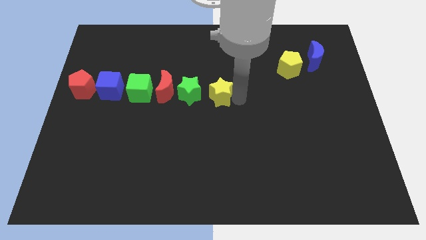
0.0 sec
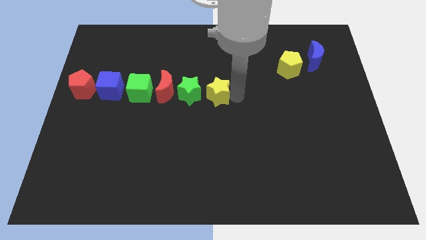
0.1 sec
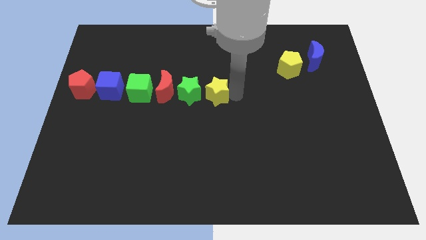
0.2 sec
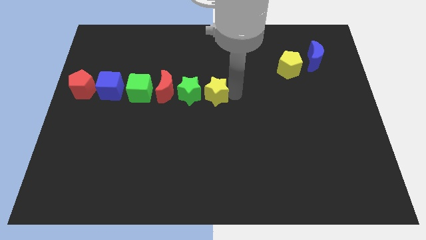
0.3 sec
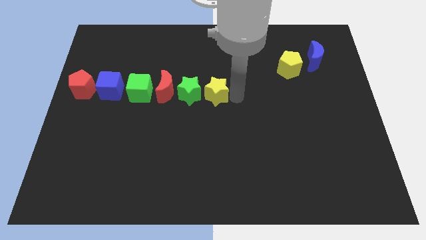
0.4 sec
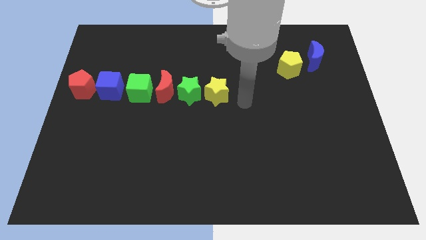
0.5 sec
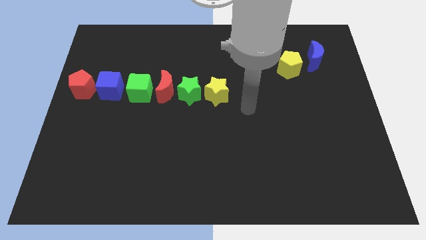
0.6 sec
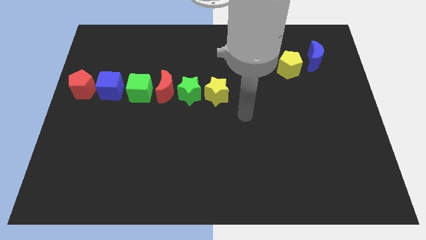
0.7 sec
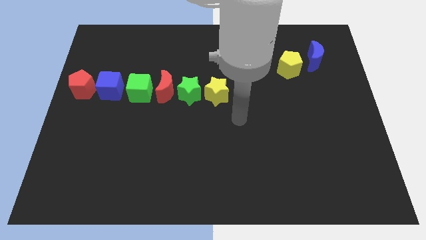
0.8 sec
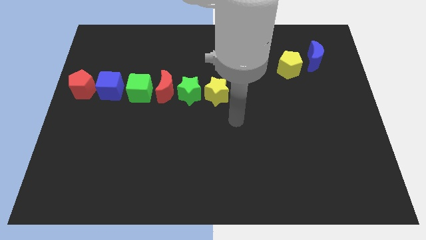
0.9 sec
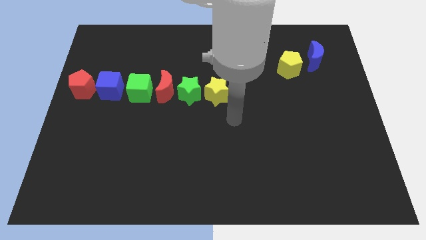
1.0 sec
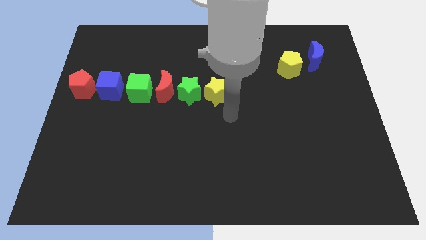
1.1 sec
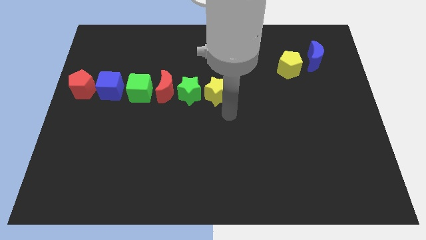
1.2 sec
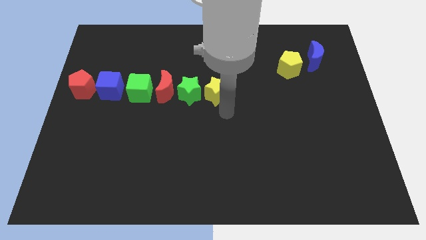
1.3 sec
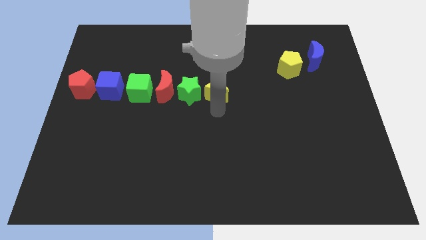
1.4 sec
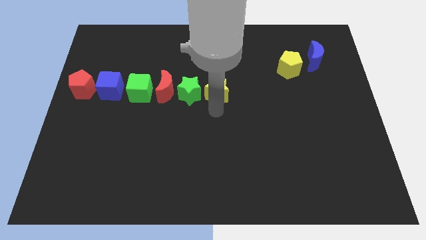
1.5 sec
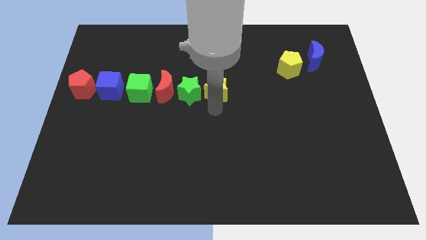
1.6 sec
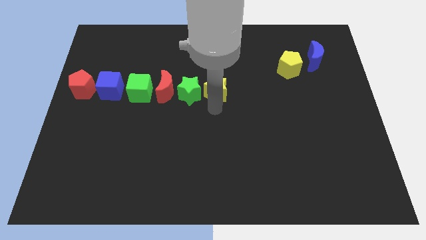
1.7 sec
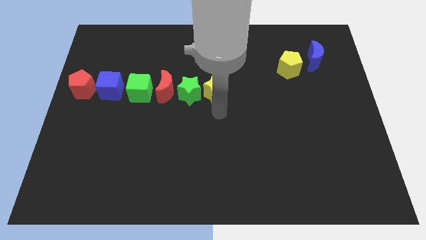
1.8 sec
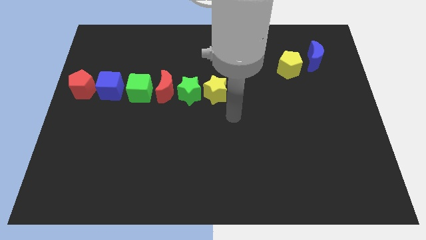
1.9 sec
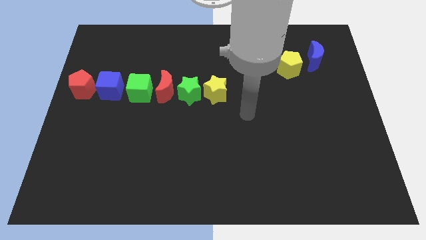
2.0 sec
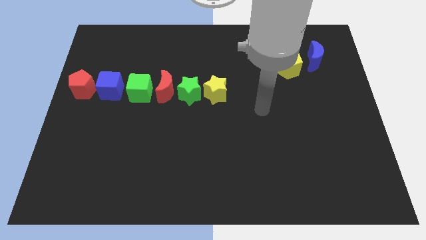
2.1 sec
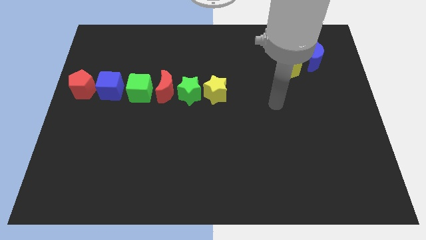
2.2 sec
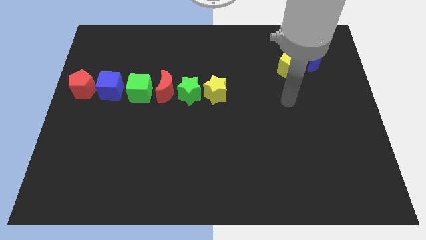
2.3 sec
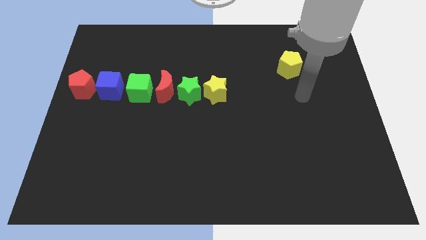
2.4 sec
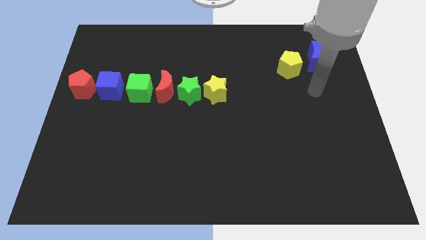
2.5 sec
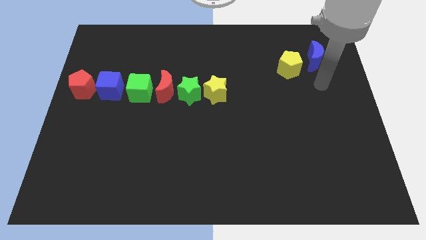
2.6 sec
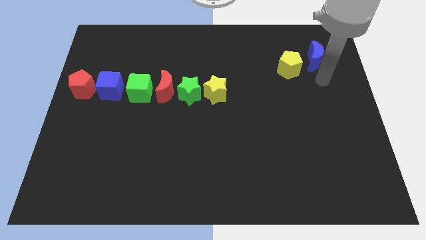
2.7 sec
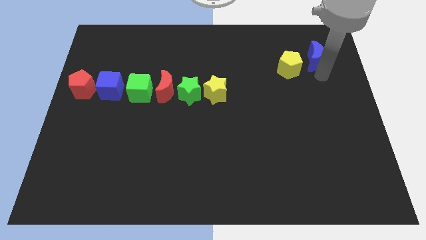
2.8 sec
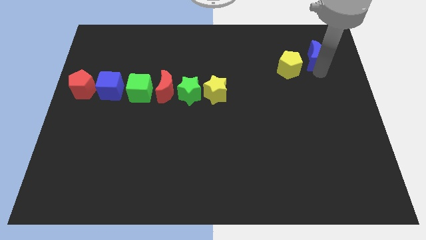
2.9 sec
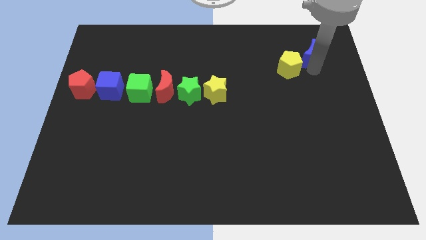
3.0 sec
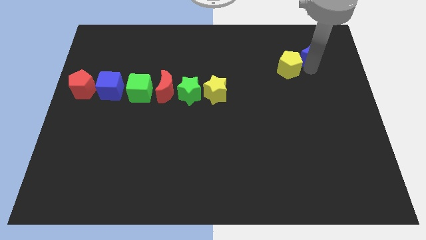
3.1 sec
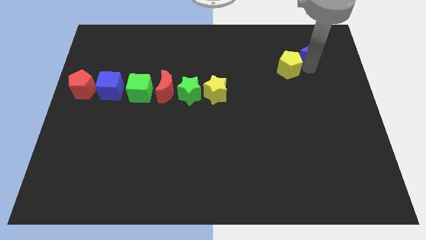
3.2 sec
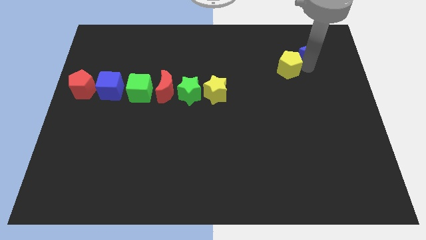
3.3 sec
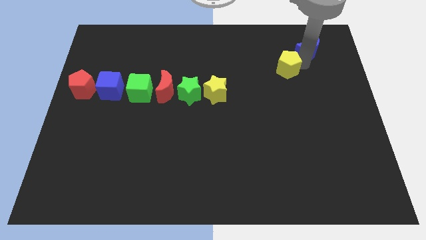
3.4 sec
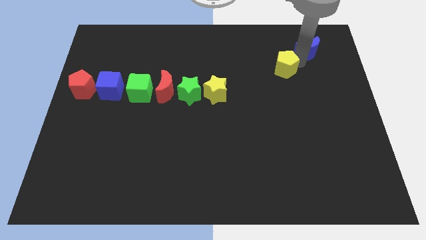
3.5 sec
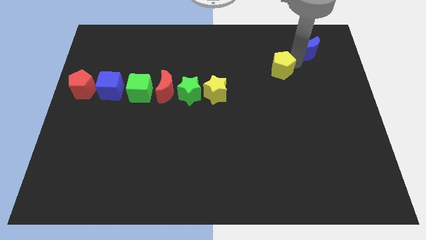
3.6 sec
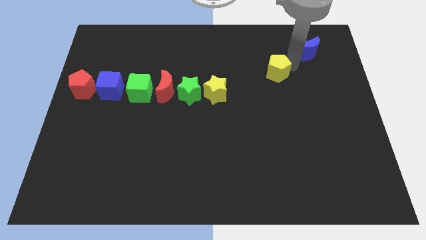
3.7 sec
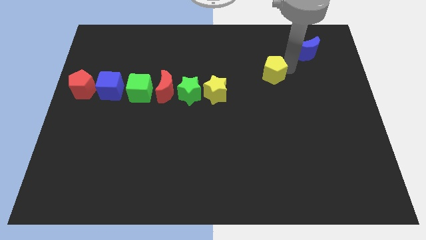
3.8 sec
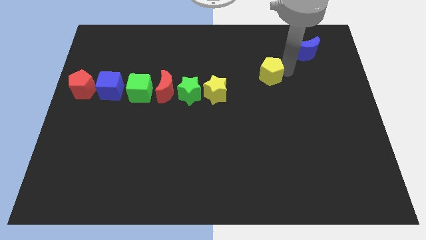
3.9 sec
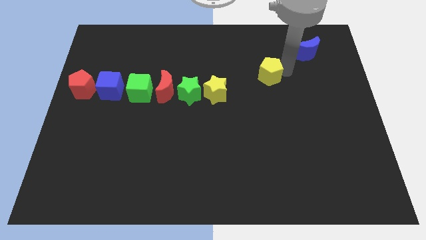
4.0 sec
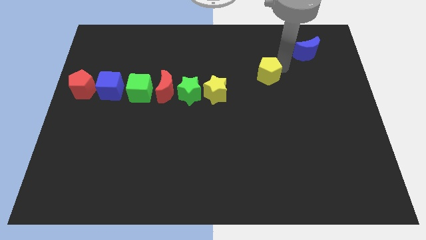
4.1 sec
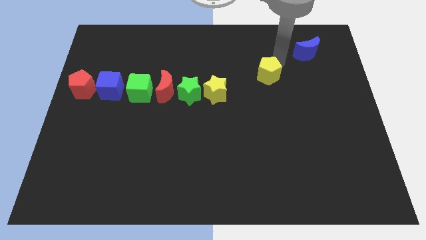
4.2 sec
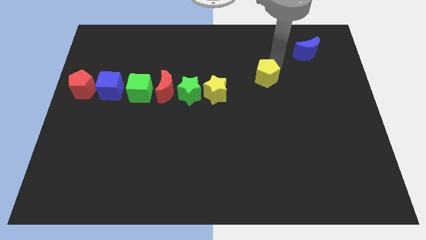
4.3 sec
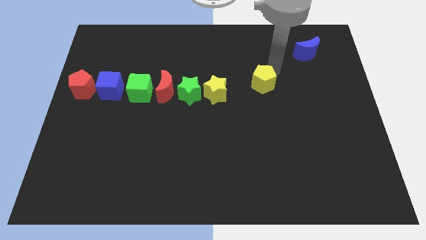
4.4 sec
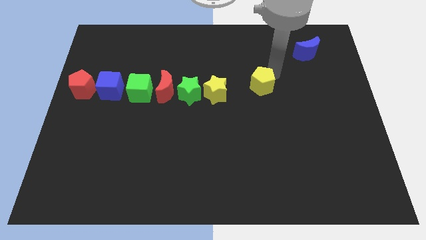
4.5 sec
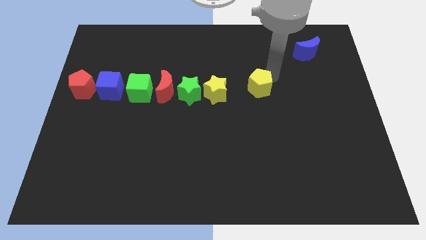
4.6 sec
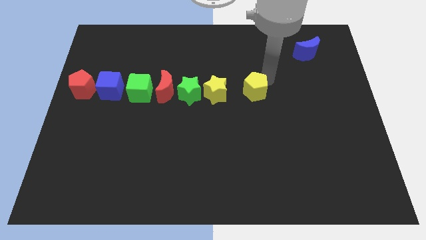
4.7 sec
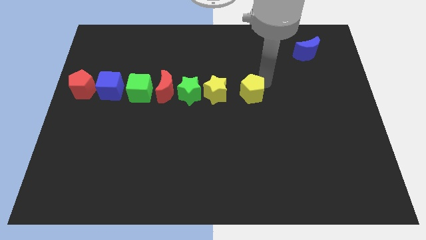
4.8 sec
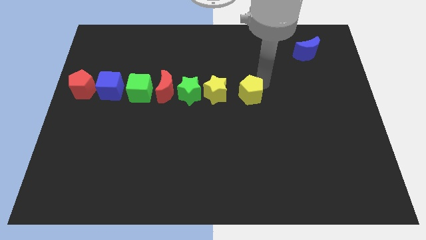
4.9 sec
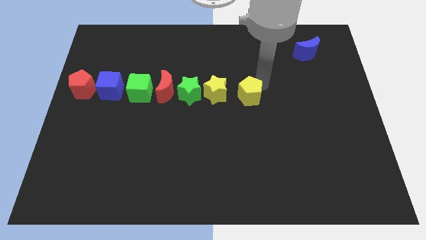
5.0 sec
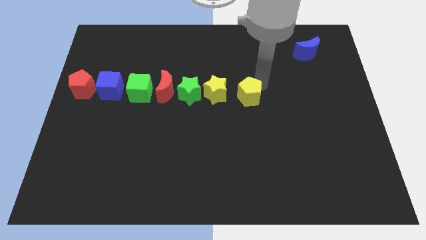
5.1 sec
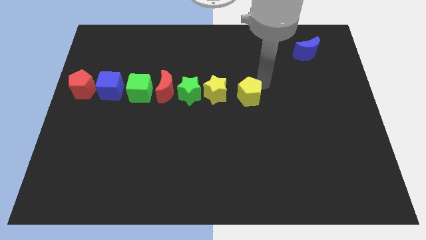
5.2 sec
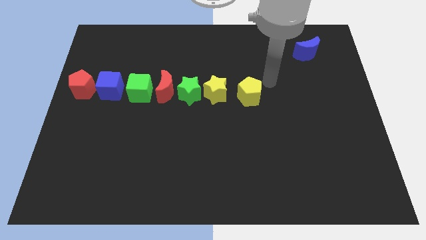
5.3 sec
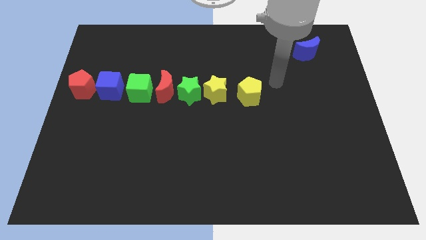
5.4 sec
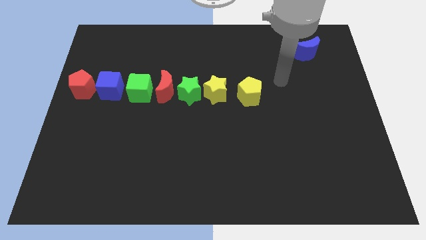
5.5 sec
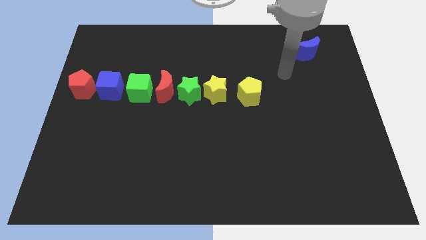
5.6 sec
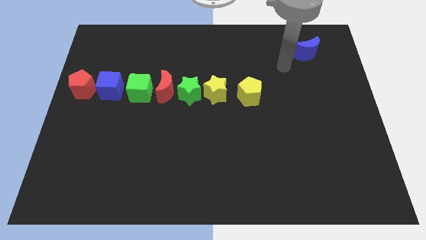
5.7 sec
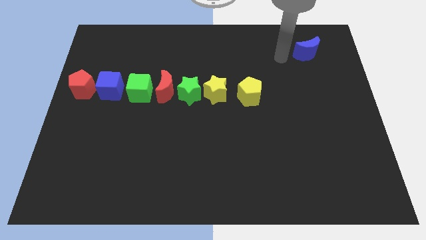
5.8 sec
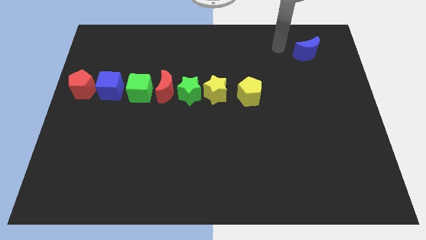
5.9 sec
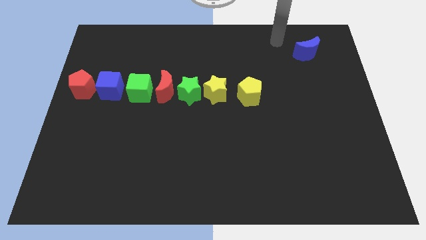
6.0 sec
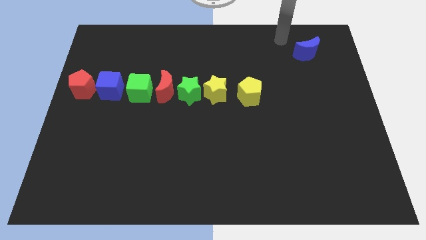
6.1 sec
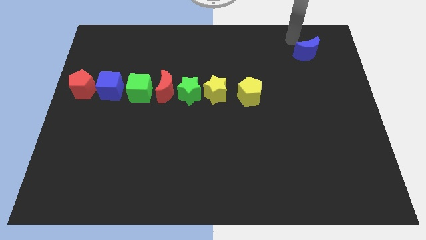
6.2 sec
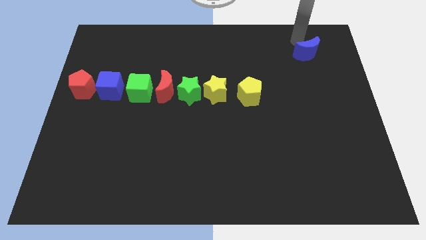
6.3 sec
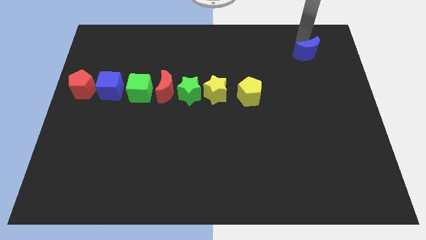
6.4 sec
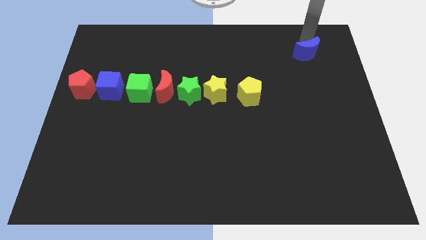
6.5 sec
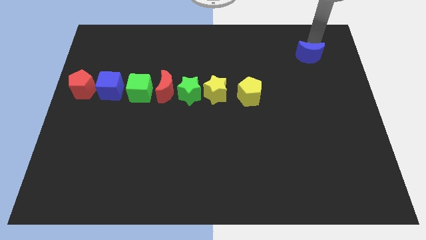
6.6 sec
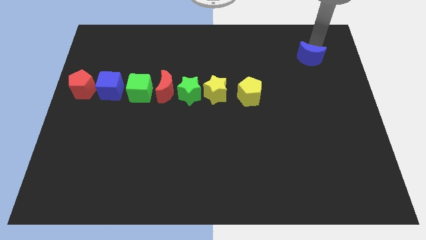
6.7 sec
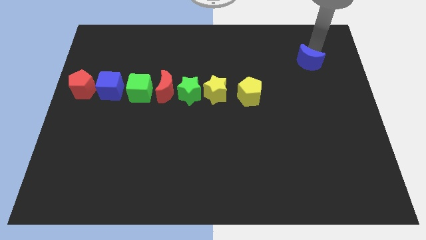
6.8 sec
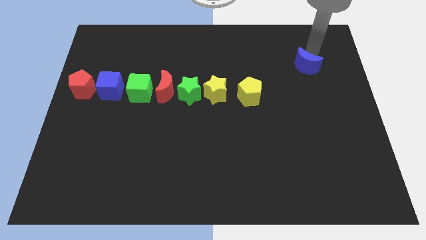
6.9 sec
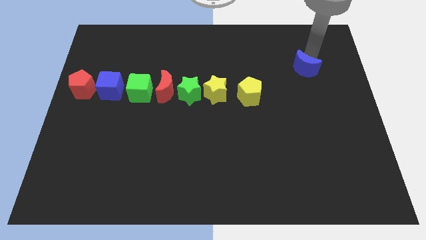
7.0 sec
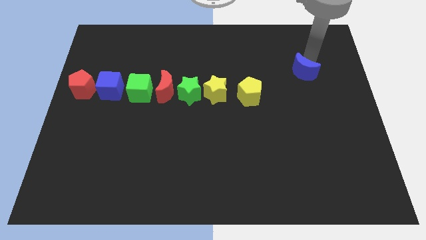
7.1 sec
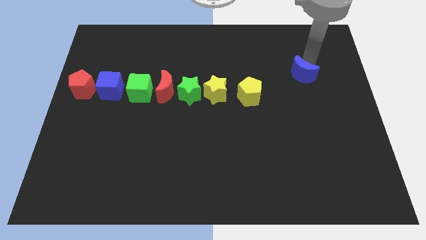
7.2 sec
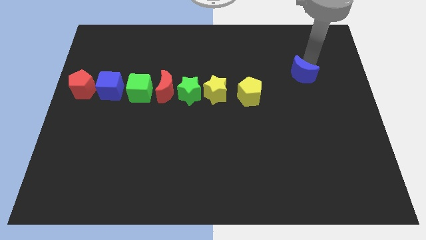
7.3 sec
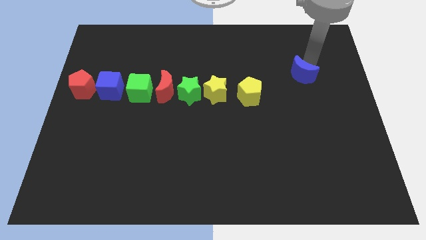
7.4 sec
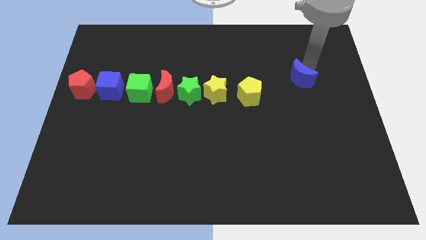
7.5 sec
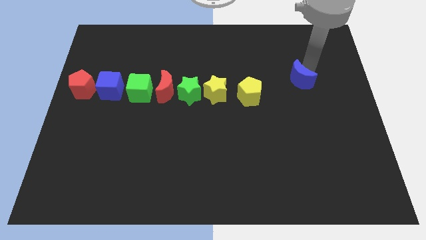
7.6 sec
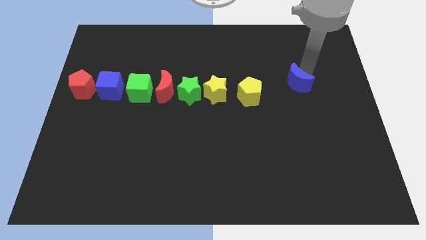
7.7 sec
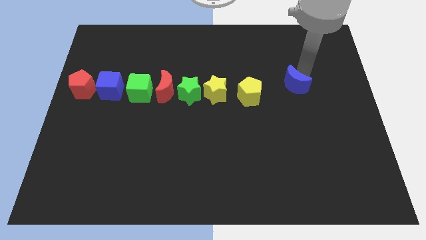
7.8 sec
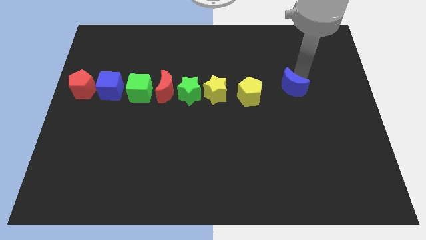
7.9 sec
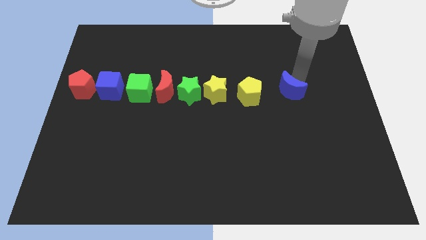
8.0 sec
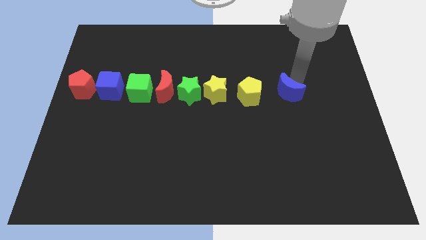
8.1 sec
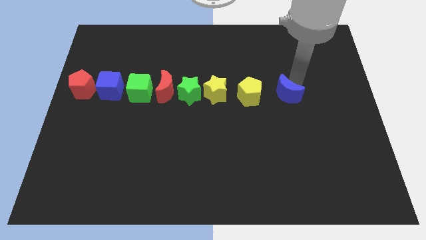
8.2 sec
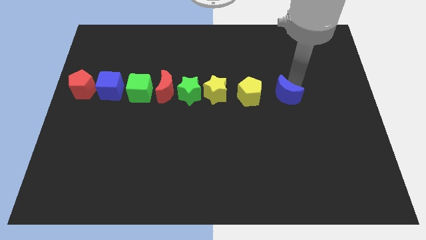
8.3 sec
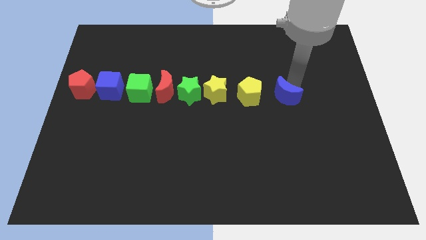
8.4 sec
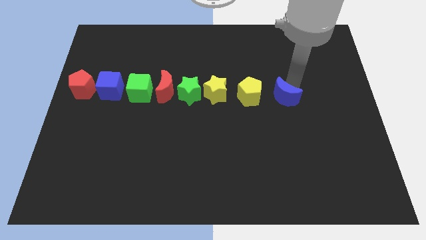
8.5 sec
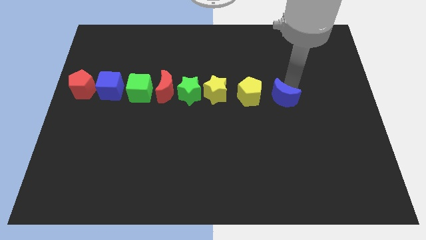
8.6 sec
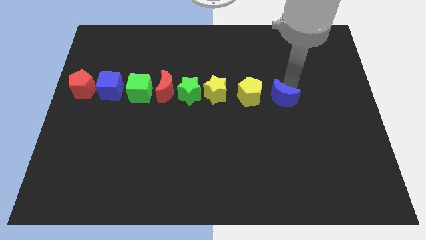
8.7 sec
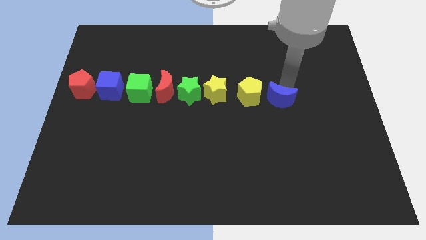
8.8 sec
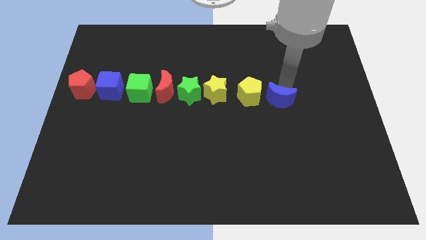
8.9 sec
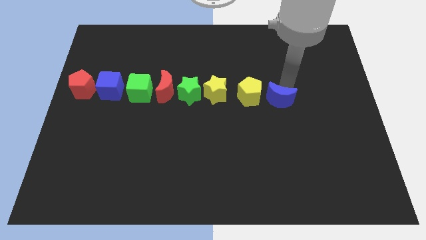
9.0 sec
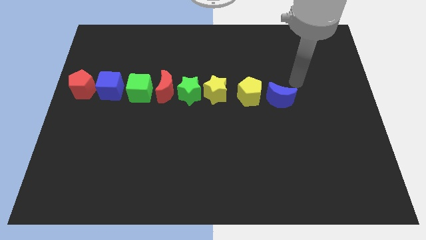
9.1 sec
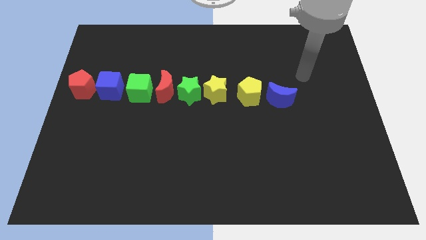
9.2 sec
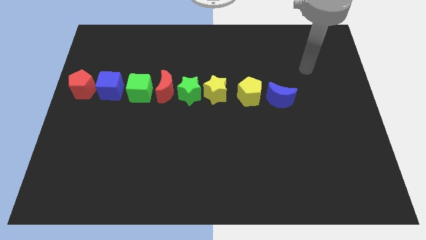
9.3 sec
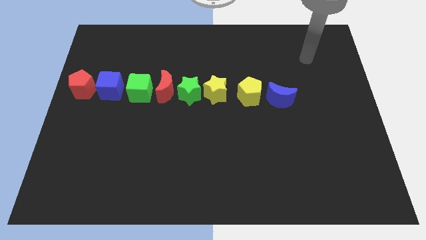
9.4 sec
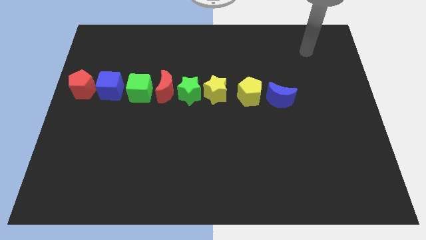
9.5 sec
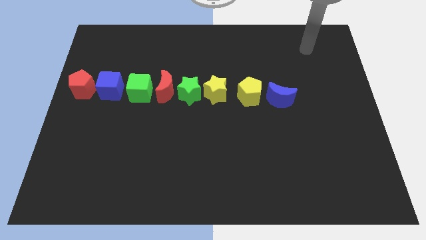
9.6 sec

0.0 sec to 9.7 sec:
make a horizontal line with all the blocks
